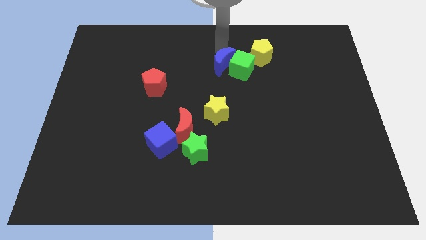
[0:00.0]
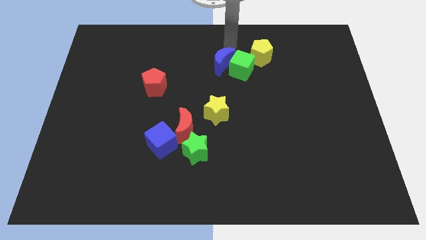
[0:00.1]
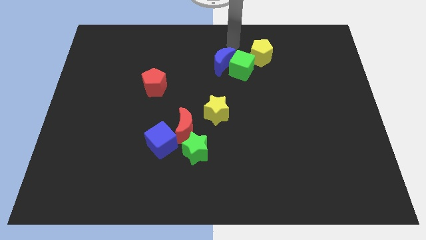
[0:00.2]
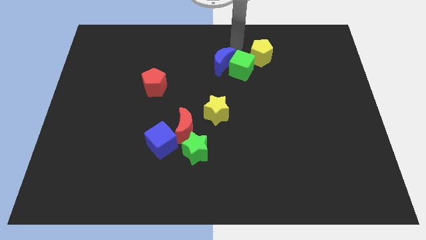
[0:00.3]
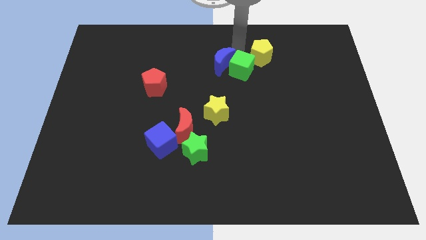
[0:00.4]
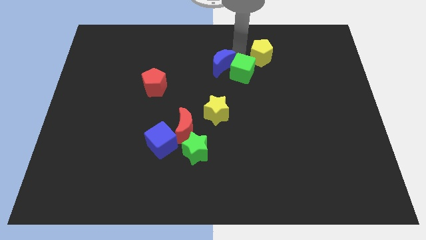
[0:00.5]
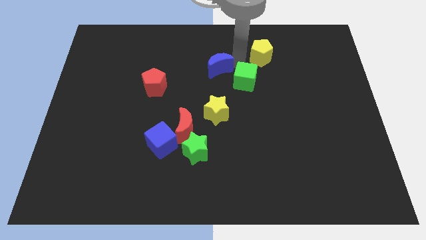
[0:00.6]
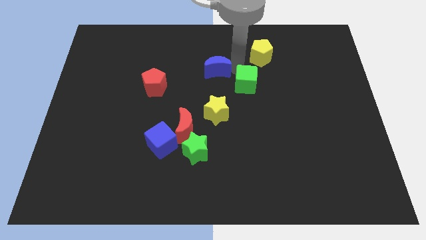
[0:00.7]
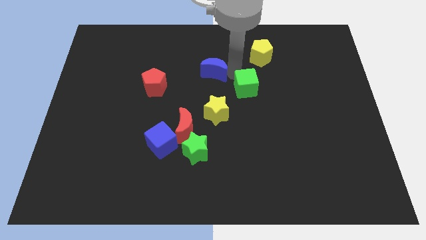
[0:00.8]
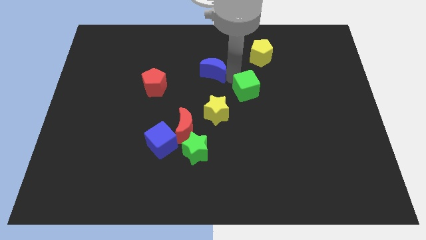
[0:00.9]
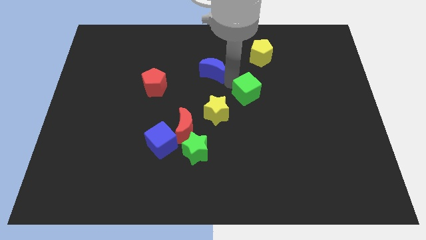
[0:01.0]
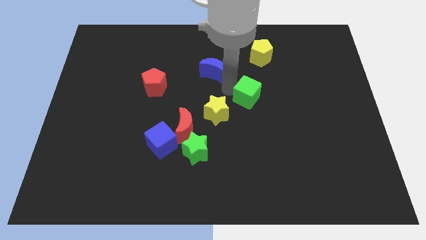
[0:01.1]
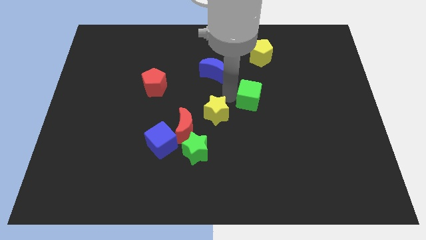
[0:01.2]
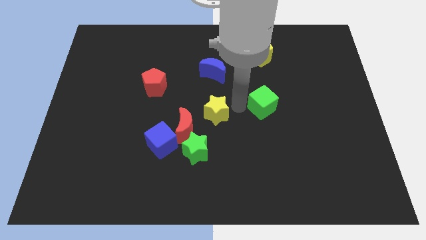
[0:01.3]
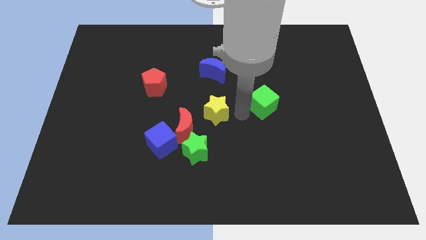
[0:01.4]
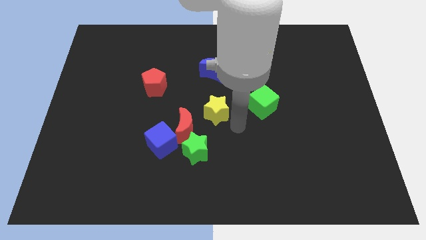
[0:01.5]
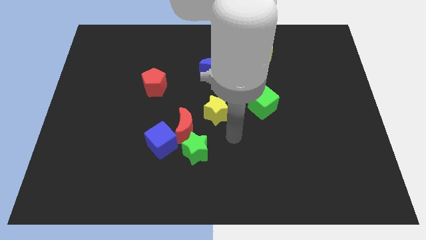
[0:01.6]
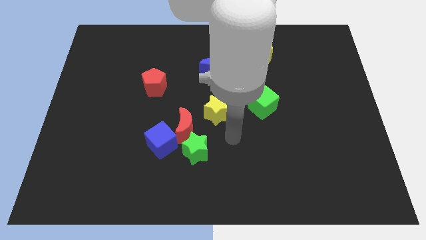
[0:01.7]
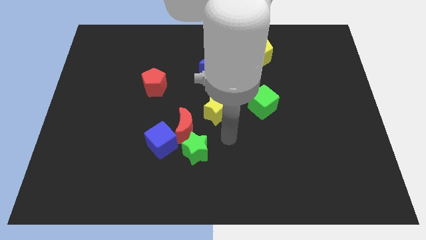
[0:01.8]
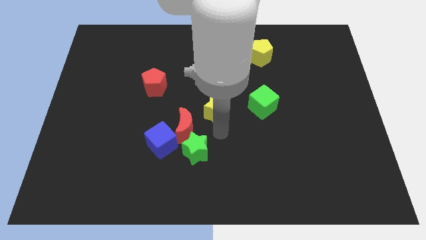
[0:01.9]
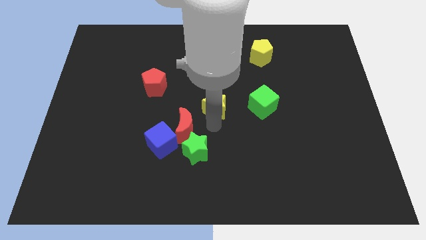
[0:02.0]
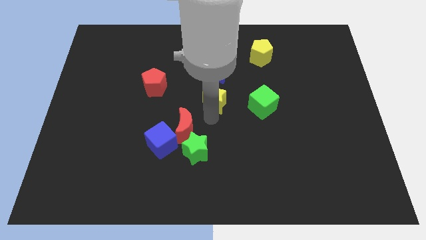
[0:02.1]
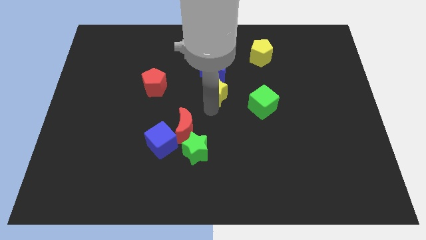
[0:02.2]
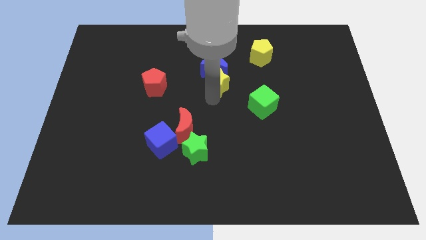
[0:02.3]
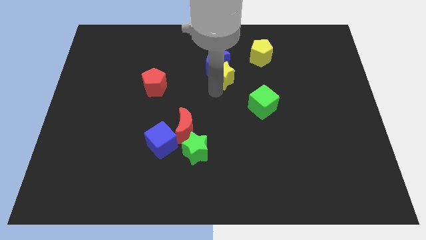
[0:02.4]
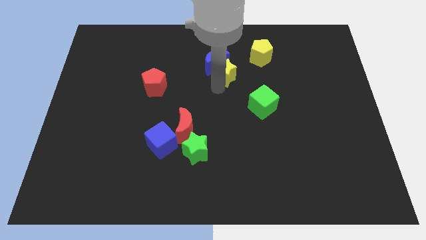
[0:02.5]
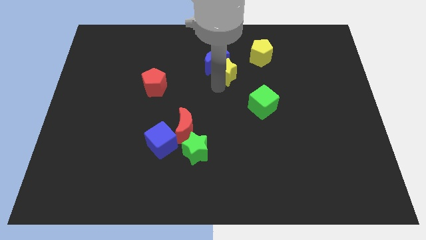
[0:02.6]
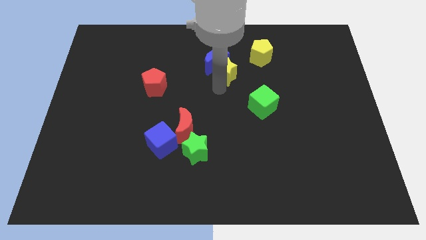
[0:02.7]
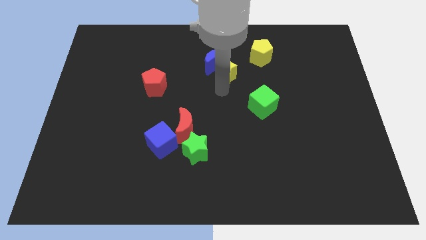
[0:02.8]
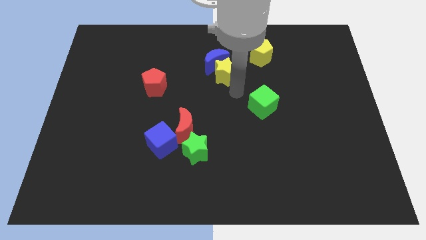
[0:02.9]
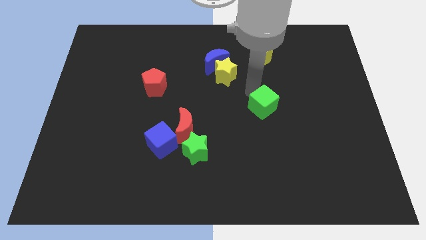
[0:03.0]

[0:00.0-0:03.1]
separate the green cube and blue moon and move the yellow star into blue moon

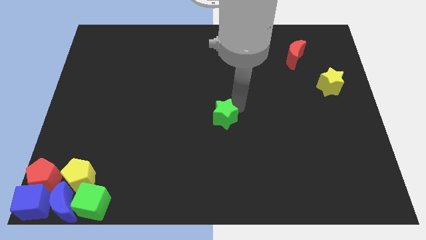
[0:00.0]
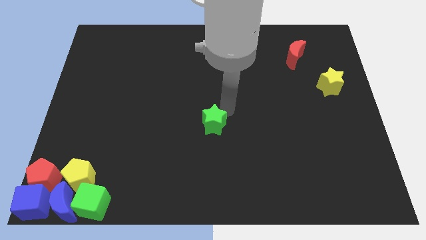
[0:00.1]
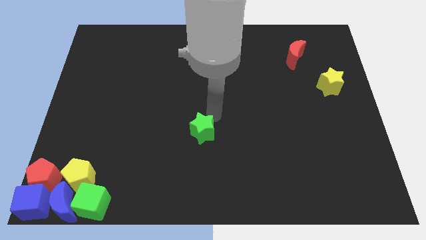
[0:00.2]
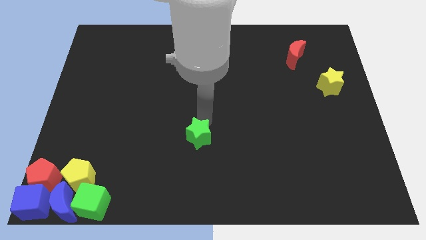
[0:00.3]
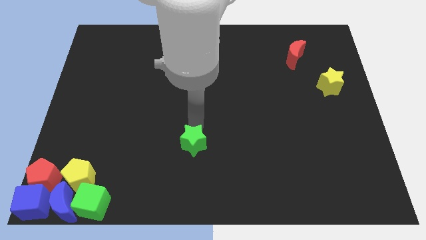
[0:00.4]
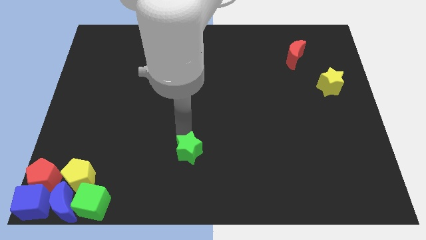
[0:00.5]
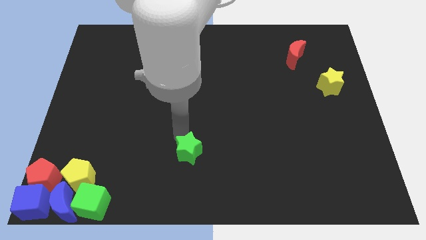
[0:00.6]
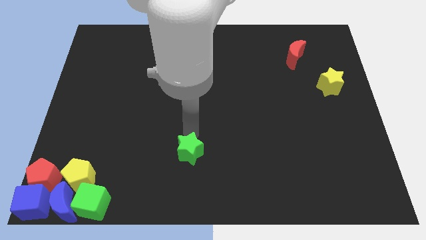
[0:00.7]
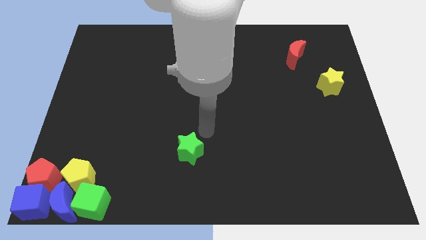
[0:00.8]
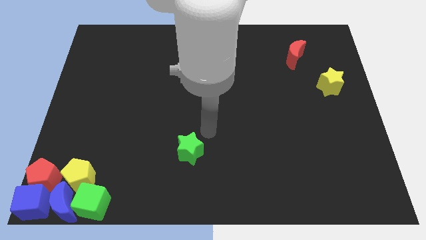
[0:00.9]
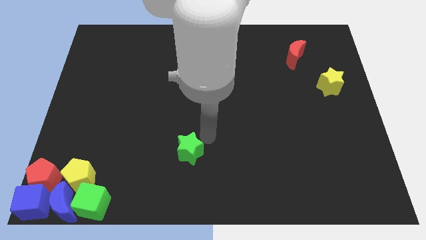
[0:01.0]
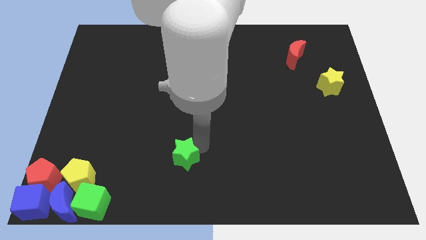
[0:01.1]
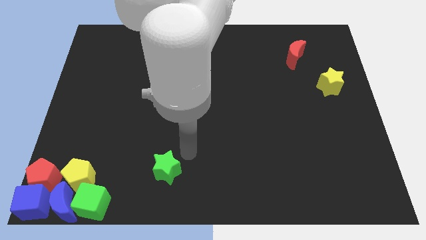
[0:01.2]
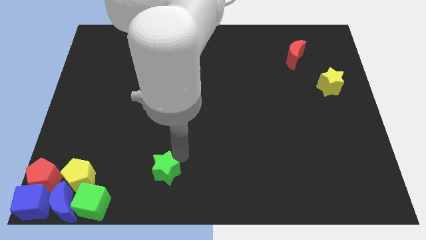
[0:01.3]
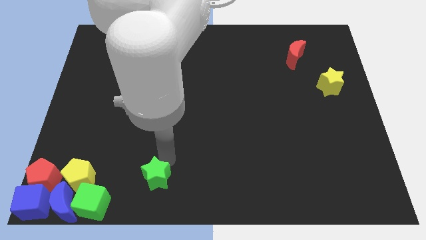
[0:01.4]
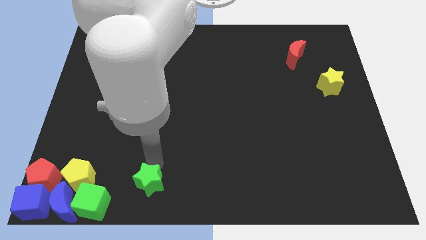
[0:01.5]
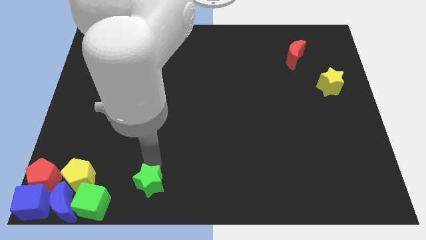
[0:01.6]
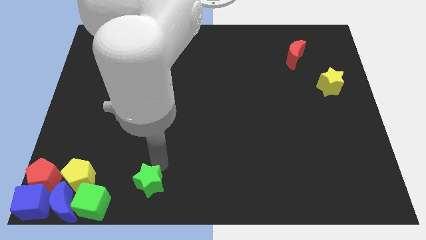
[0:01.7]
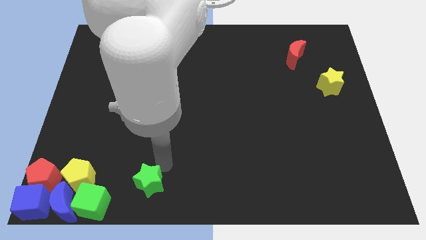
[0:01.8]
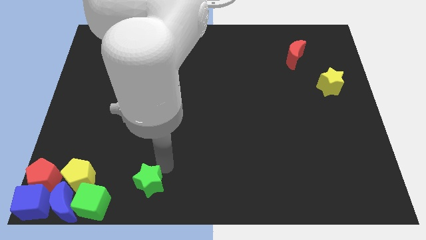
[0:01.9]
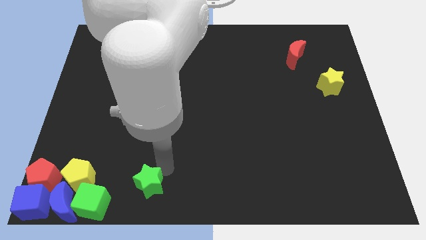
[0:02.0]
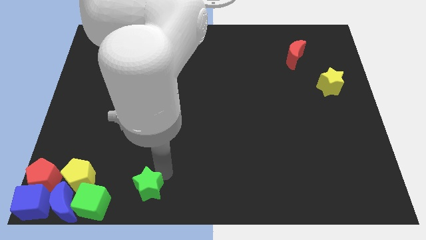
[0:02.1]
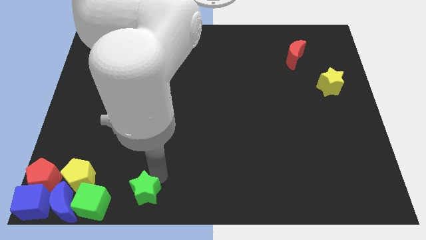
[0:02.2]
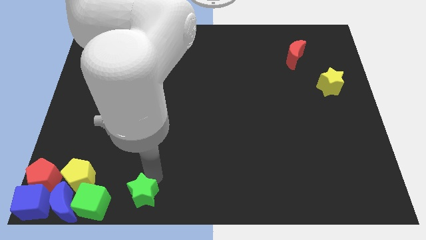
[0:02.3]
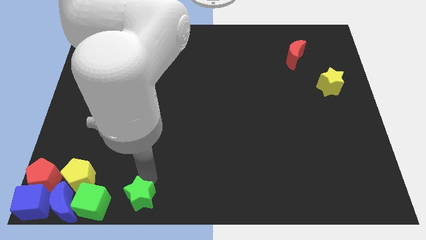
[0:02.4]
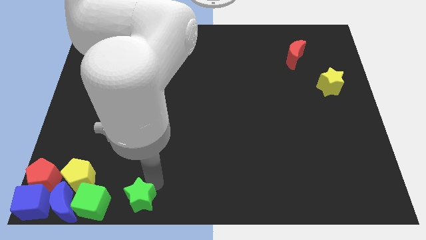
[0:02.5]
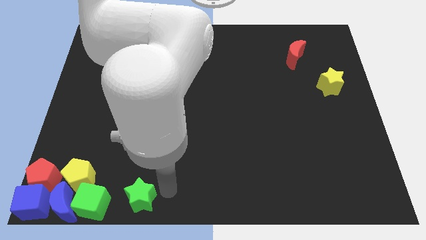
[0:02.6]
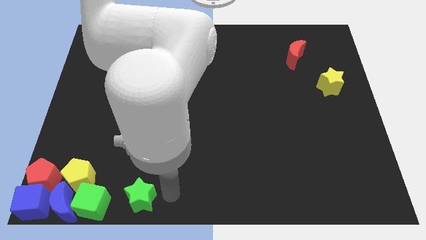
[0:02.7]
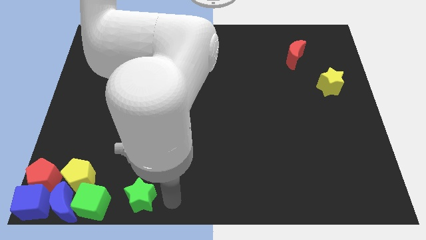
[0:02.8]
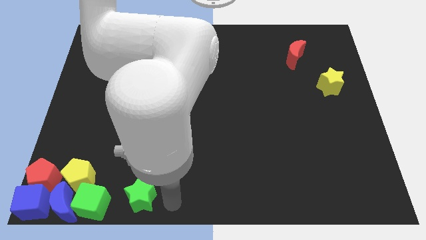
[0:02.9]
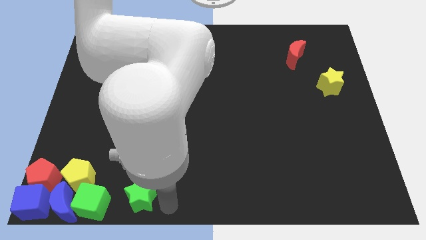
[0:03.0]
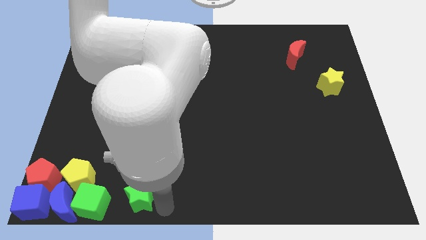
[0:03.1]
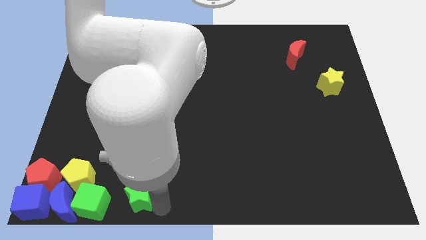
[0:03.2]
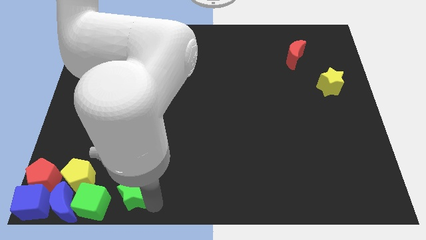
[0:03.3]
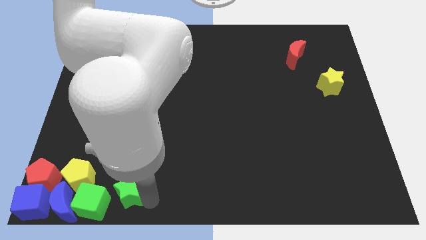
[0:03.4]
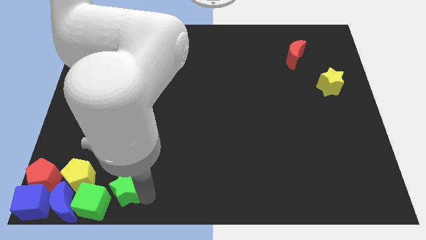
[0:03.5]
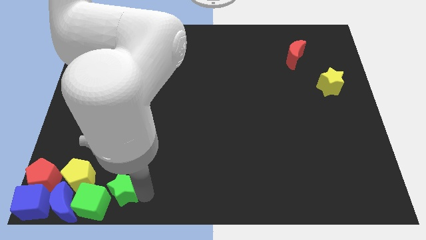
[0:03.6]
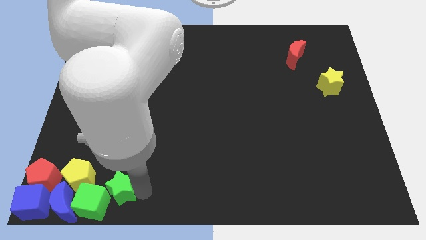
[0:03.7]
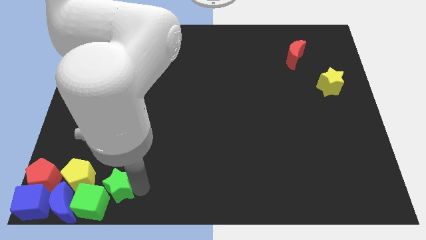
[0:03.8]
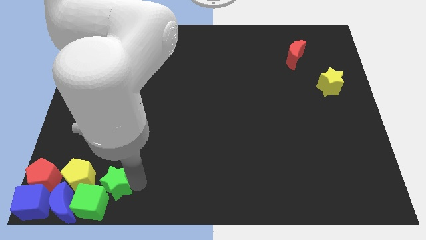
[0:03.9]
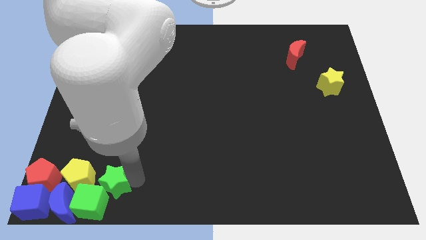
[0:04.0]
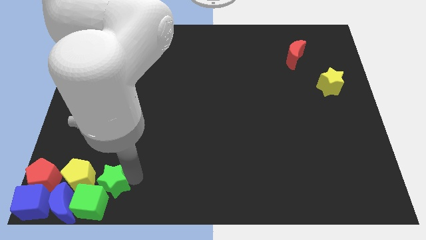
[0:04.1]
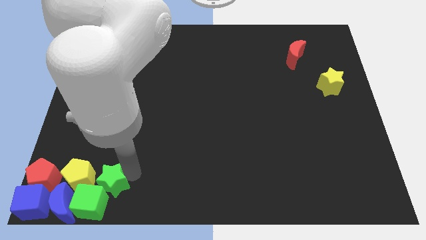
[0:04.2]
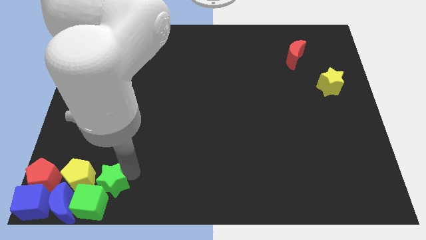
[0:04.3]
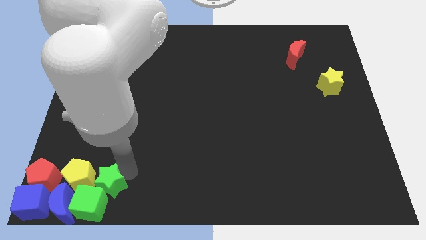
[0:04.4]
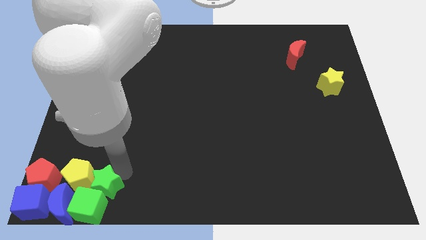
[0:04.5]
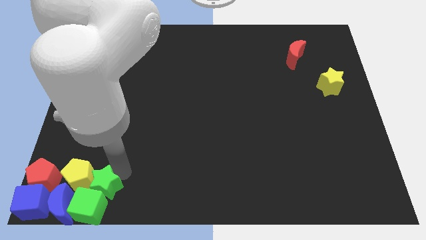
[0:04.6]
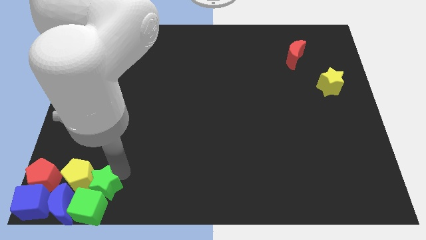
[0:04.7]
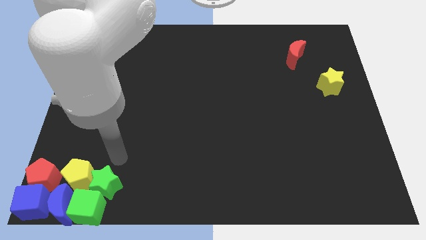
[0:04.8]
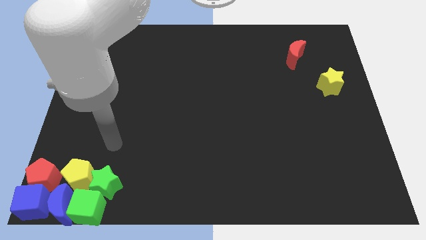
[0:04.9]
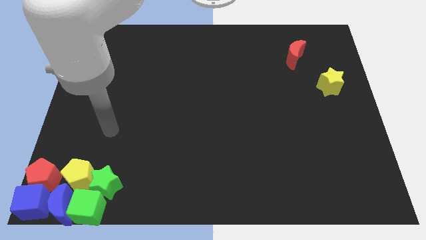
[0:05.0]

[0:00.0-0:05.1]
move the green star into the green cube

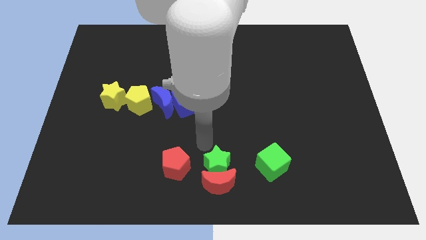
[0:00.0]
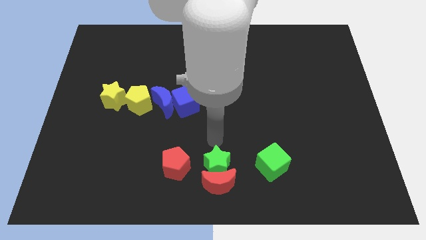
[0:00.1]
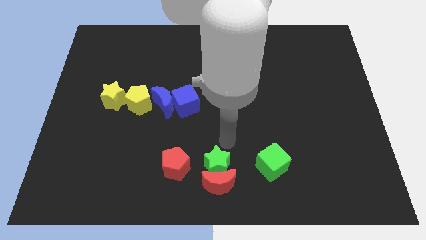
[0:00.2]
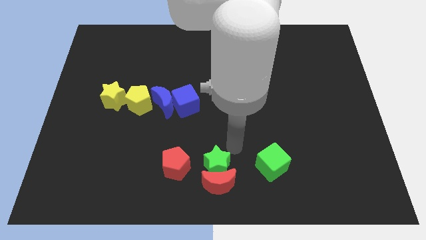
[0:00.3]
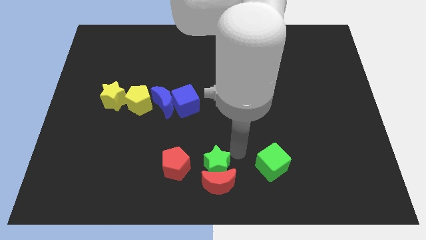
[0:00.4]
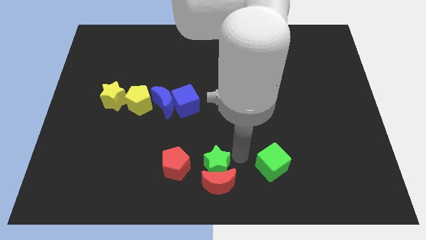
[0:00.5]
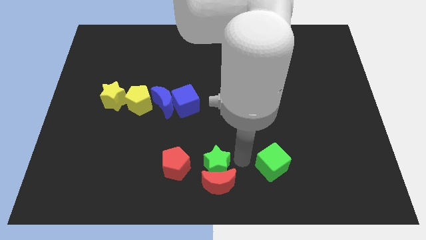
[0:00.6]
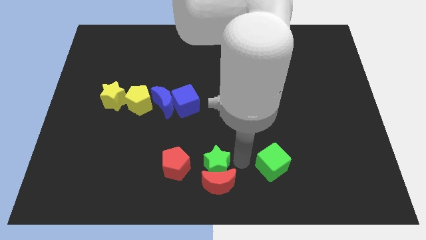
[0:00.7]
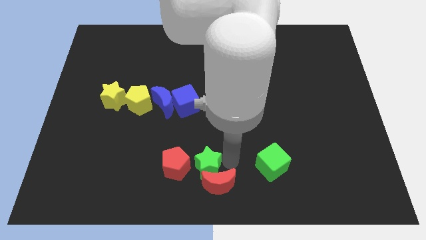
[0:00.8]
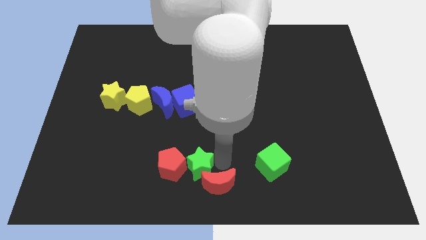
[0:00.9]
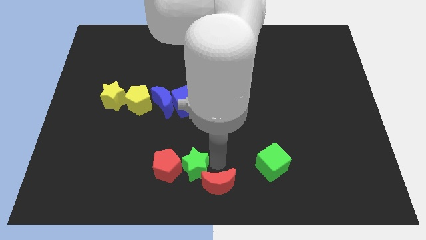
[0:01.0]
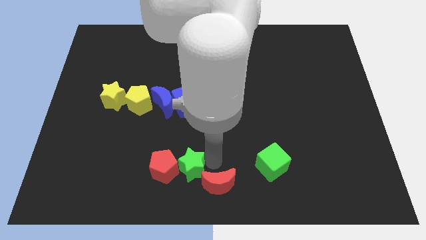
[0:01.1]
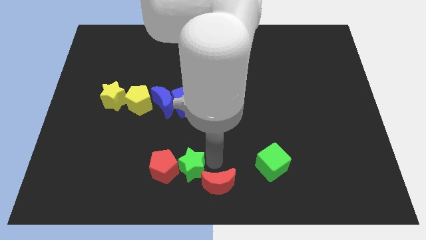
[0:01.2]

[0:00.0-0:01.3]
push the green star into the red pentagon
